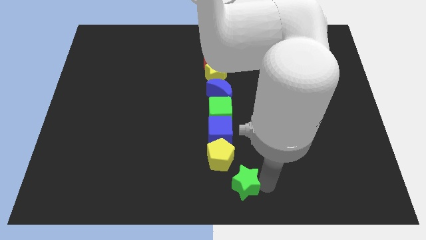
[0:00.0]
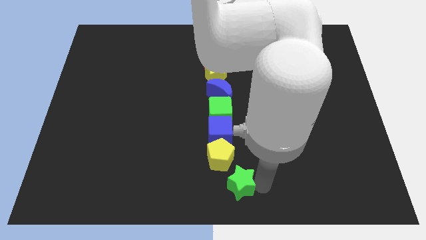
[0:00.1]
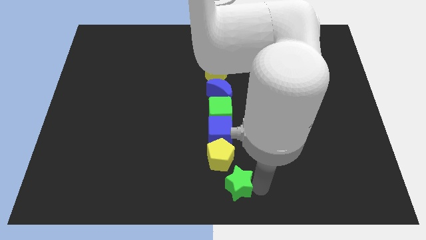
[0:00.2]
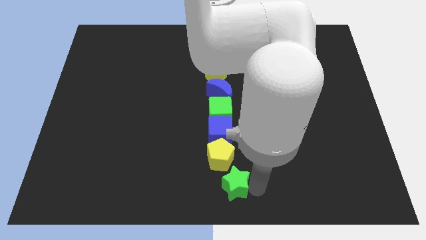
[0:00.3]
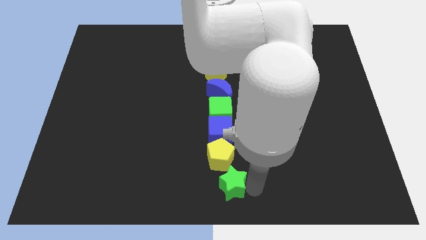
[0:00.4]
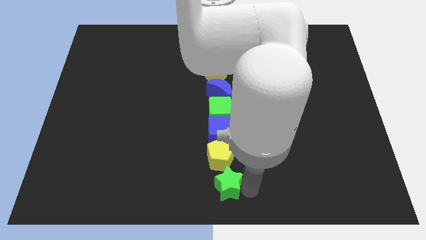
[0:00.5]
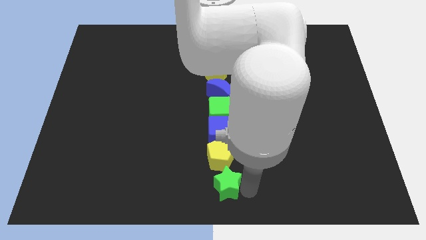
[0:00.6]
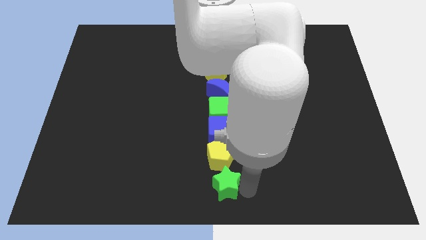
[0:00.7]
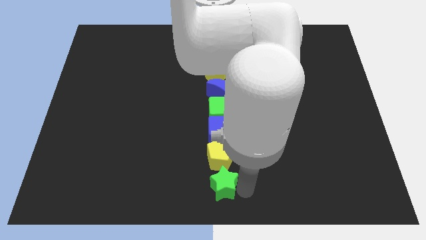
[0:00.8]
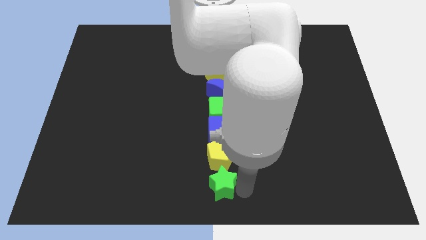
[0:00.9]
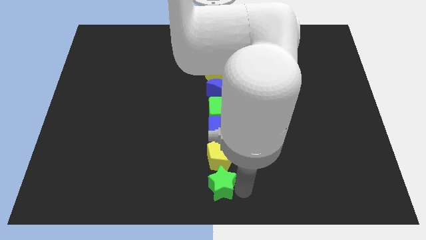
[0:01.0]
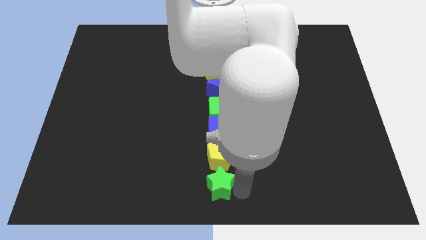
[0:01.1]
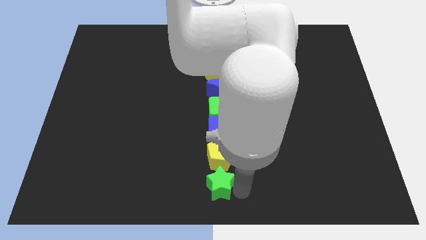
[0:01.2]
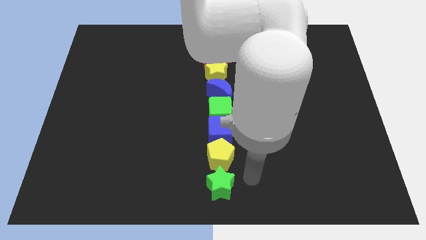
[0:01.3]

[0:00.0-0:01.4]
slide the green star slightly to the left

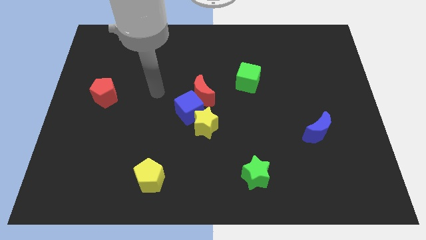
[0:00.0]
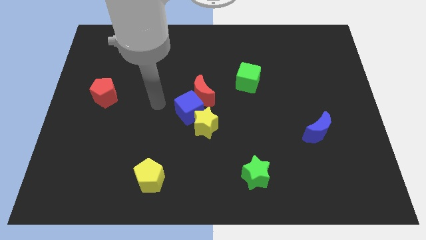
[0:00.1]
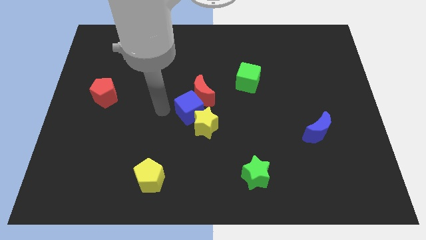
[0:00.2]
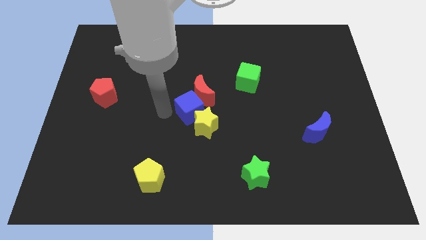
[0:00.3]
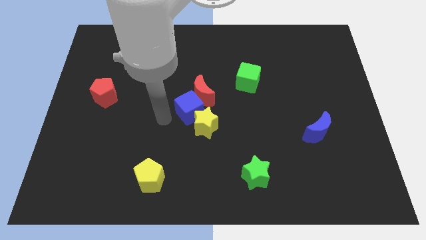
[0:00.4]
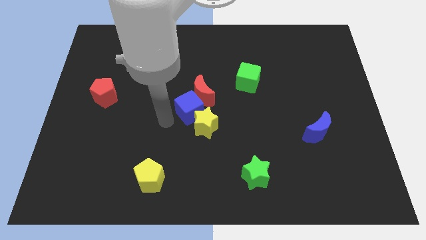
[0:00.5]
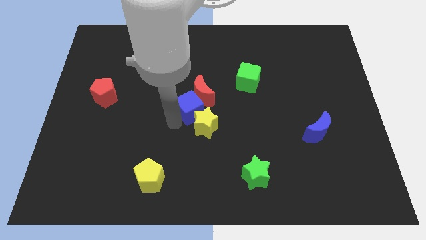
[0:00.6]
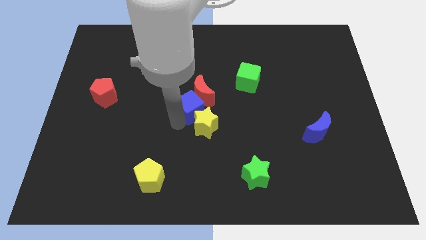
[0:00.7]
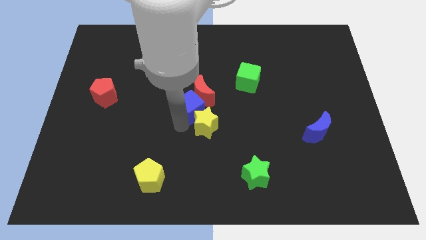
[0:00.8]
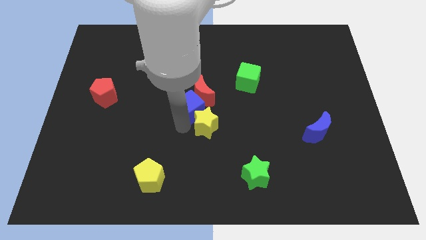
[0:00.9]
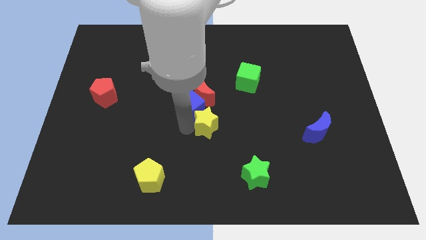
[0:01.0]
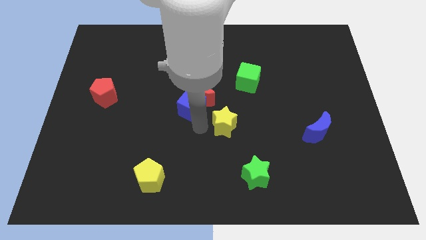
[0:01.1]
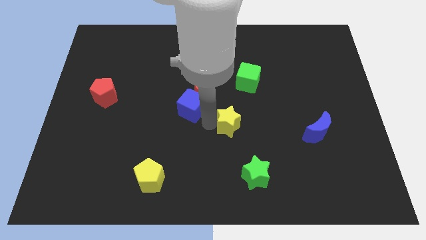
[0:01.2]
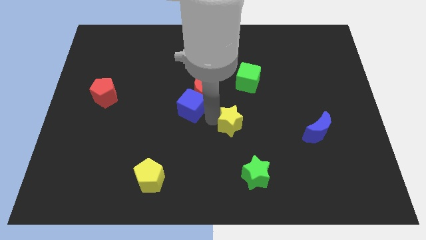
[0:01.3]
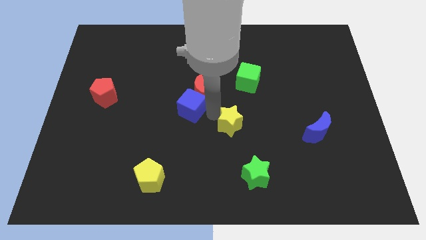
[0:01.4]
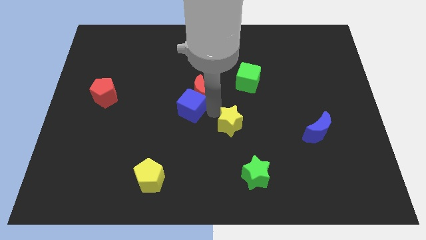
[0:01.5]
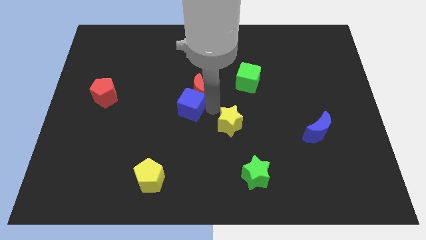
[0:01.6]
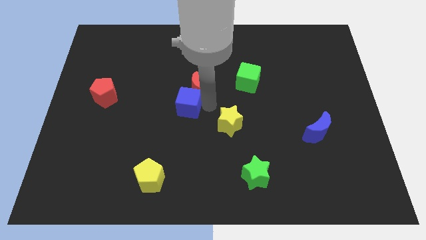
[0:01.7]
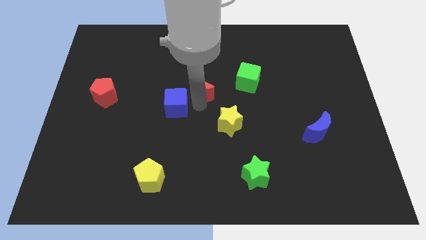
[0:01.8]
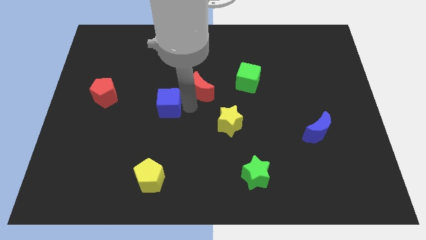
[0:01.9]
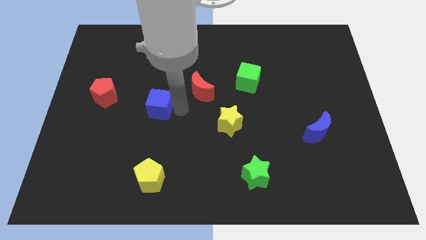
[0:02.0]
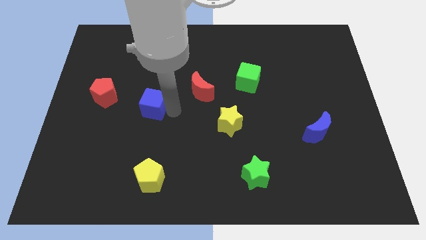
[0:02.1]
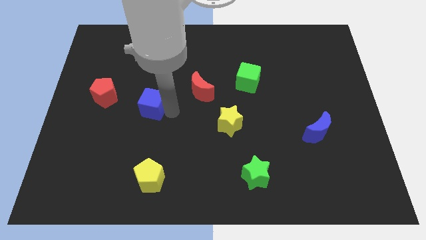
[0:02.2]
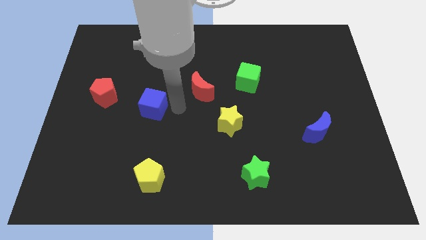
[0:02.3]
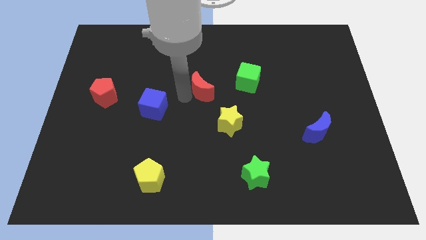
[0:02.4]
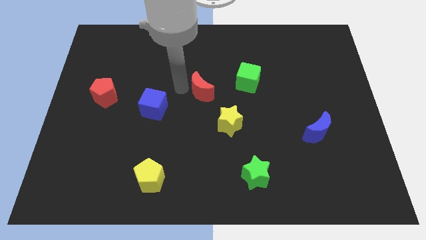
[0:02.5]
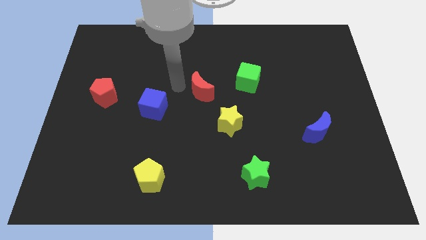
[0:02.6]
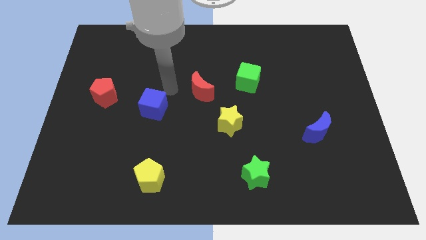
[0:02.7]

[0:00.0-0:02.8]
separate the blue cube from the red crescent

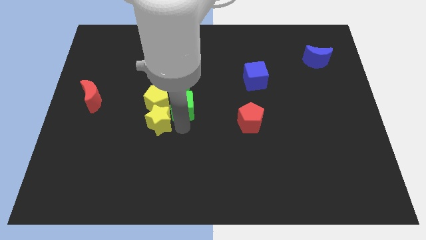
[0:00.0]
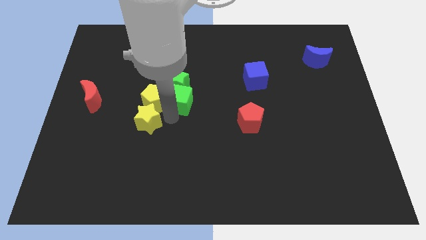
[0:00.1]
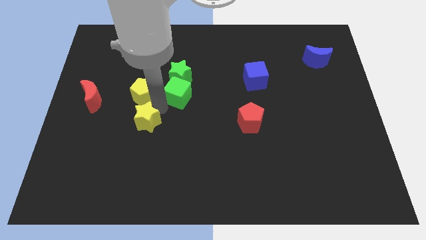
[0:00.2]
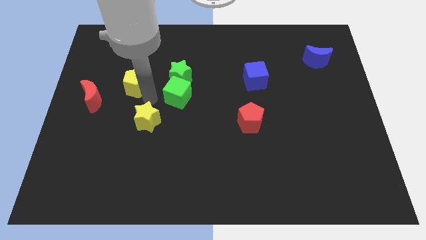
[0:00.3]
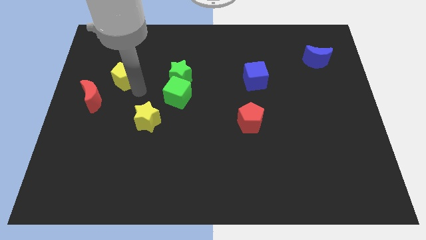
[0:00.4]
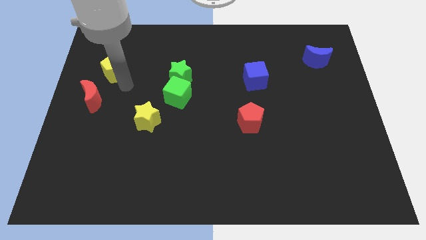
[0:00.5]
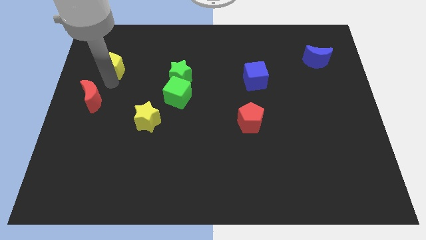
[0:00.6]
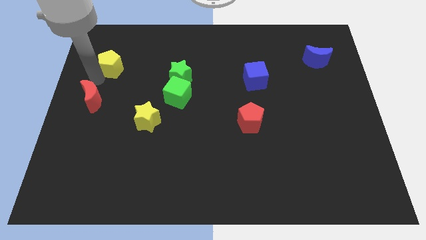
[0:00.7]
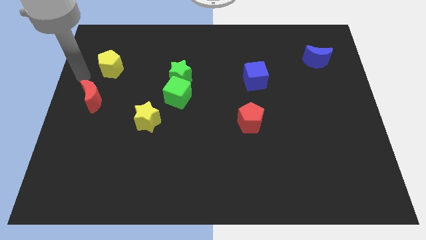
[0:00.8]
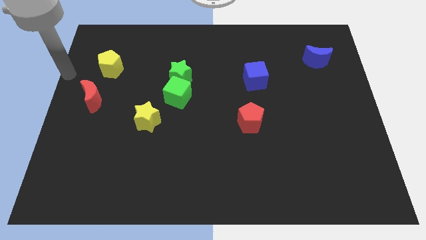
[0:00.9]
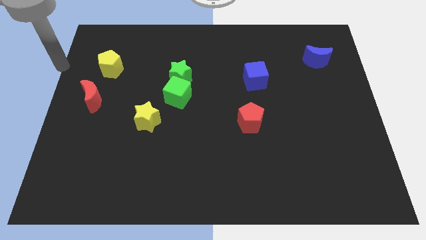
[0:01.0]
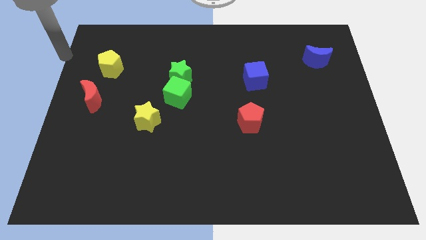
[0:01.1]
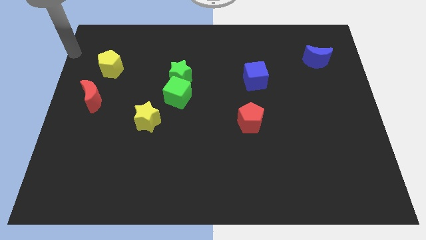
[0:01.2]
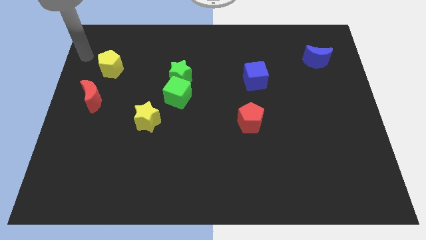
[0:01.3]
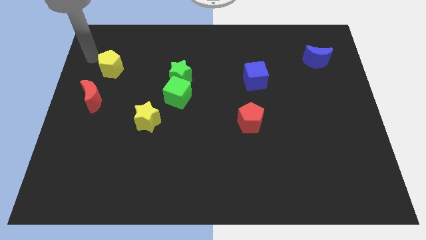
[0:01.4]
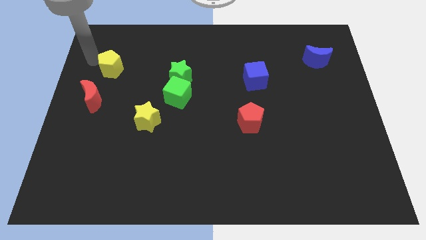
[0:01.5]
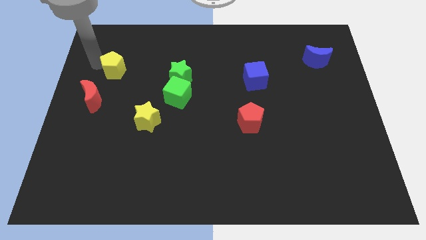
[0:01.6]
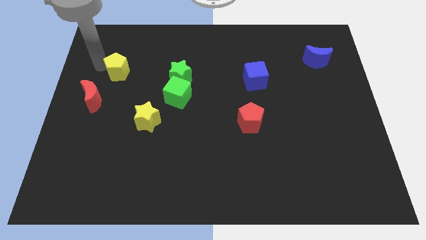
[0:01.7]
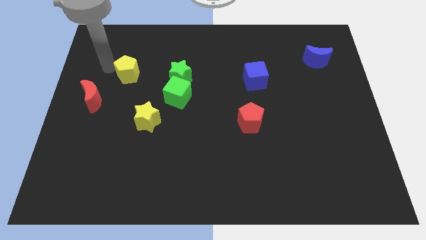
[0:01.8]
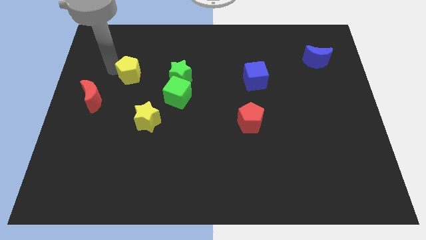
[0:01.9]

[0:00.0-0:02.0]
separate the yellow pentagon from the group of object

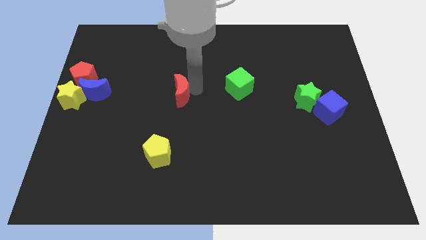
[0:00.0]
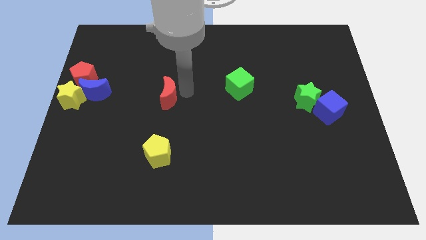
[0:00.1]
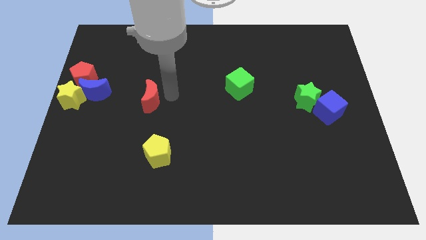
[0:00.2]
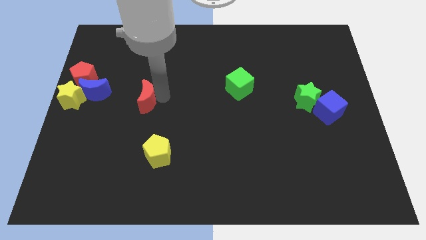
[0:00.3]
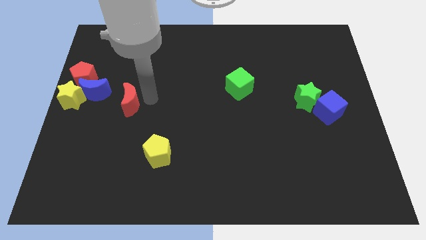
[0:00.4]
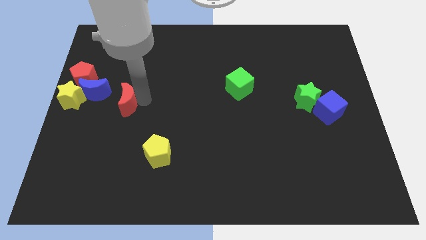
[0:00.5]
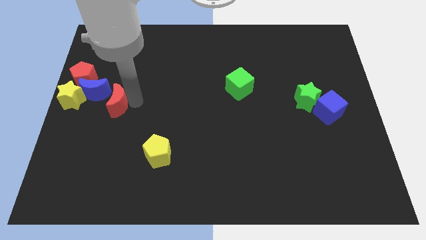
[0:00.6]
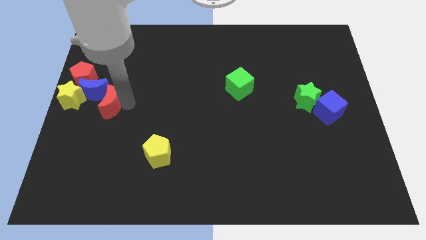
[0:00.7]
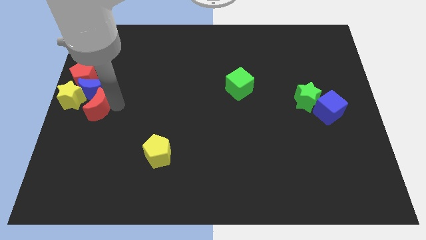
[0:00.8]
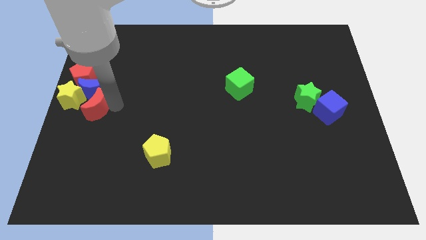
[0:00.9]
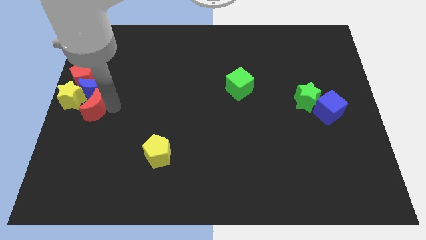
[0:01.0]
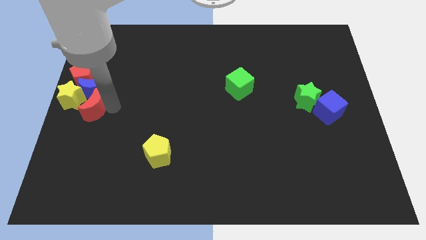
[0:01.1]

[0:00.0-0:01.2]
slide the red moon diagonally top left to the yellow pentagon

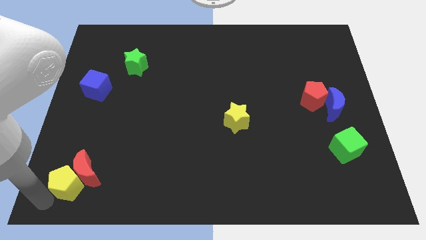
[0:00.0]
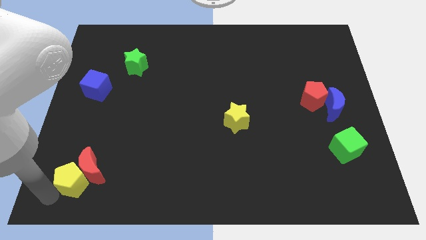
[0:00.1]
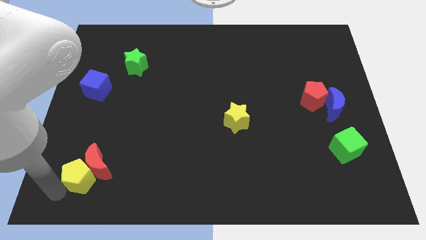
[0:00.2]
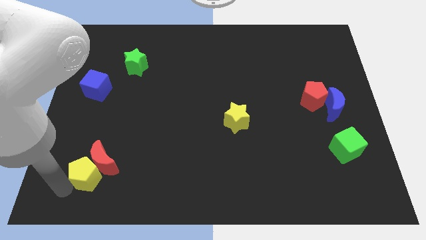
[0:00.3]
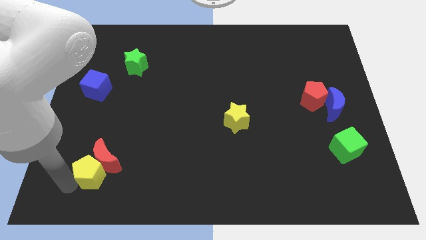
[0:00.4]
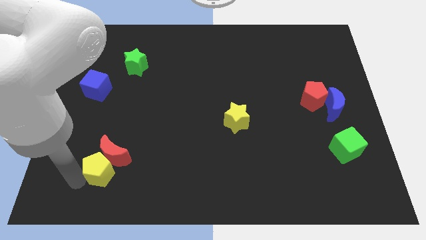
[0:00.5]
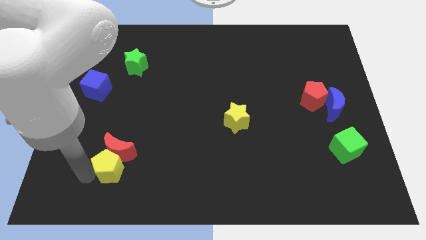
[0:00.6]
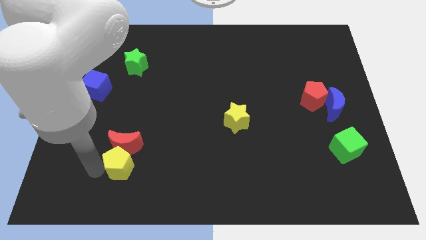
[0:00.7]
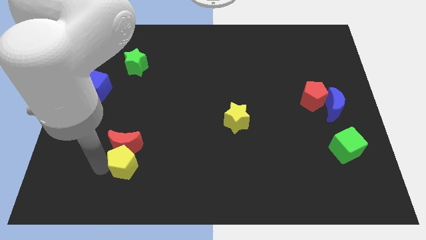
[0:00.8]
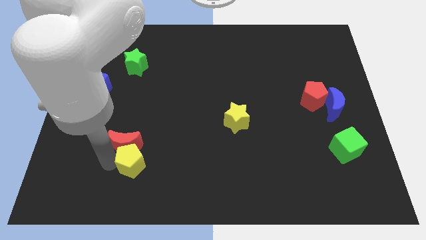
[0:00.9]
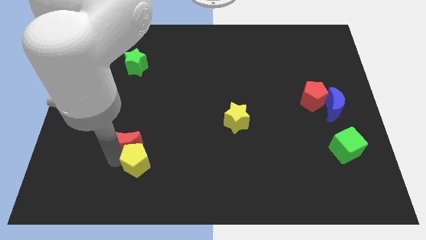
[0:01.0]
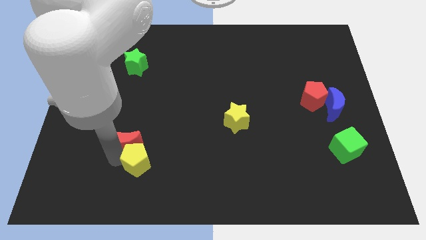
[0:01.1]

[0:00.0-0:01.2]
move the red moon along with the yellow pentagon towards the yellow star

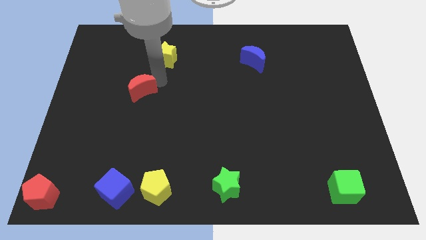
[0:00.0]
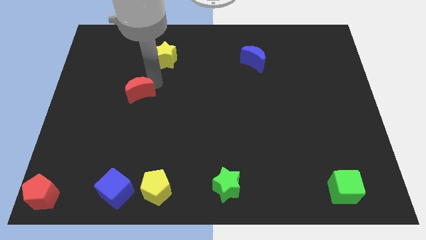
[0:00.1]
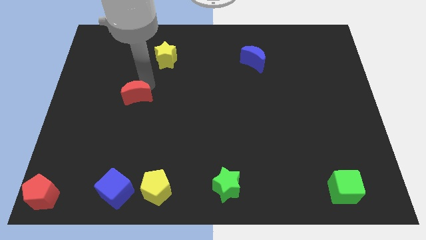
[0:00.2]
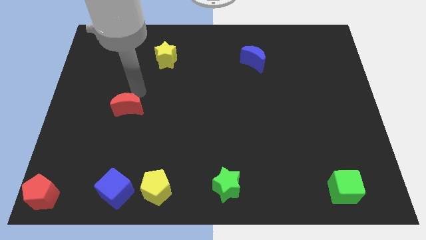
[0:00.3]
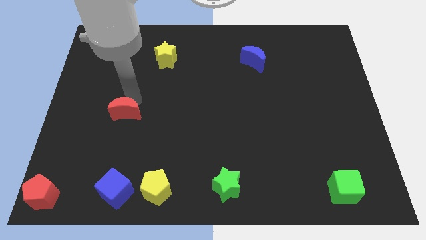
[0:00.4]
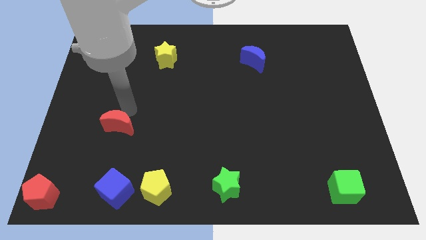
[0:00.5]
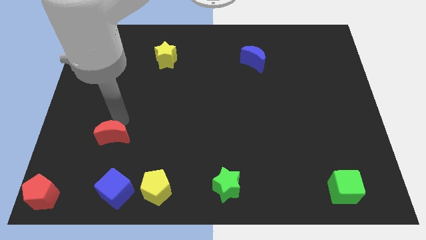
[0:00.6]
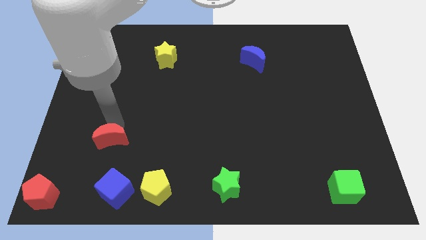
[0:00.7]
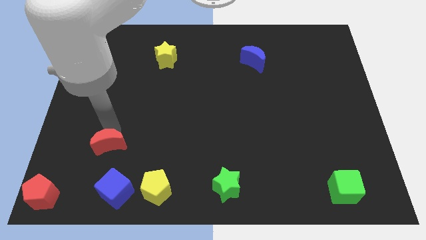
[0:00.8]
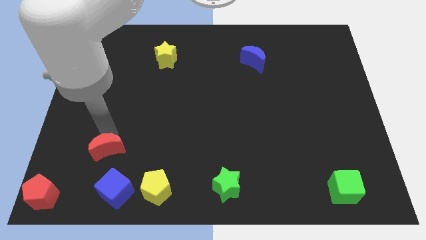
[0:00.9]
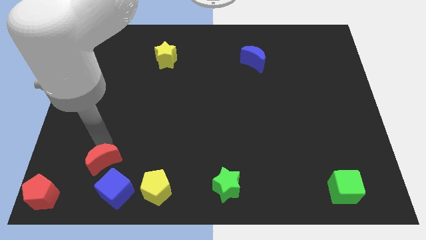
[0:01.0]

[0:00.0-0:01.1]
place red crescent above blue cube
